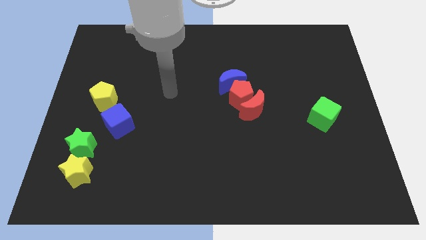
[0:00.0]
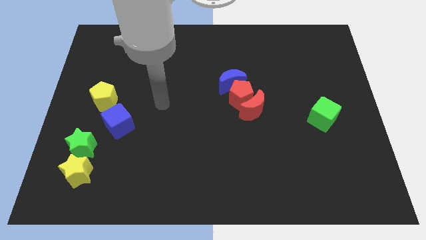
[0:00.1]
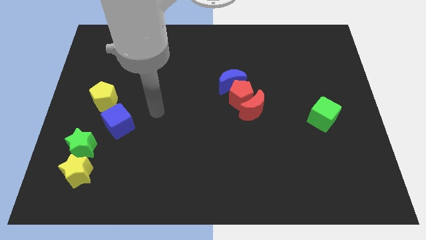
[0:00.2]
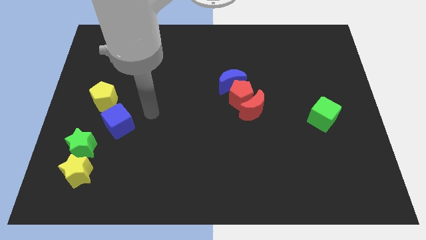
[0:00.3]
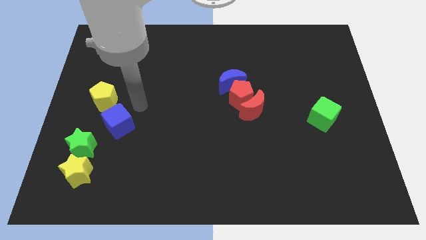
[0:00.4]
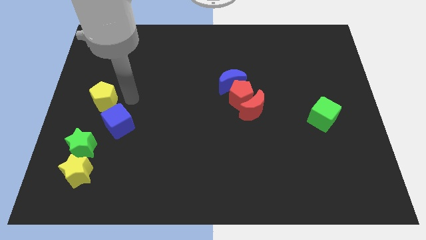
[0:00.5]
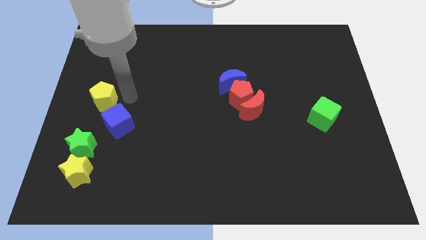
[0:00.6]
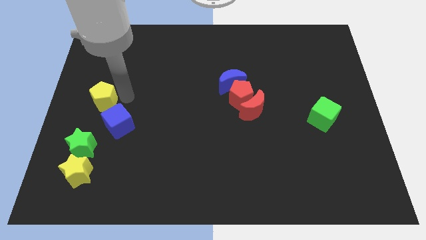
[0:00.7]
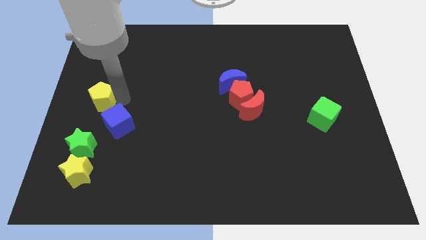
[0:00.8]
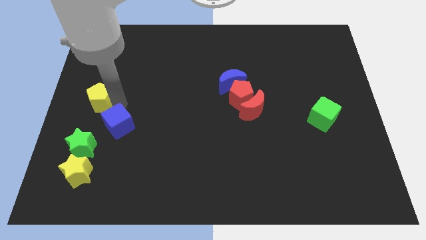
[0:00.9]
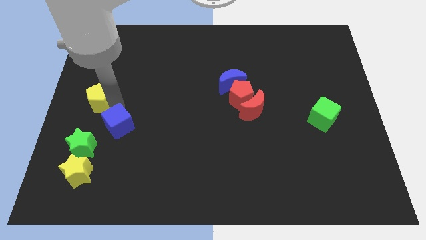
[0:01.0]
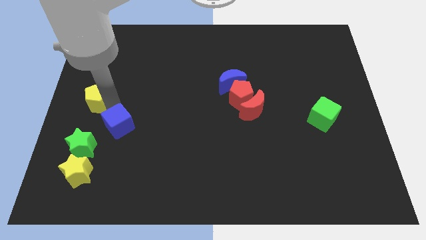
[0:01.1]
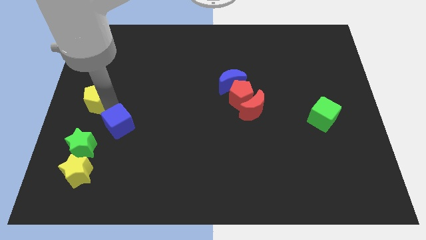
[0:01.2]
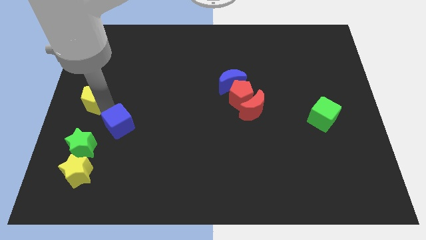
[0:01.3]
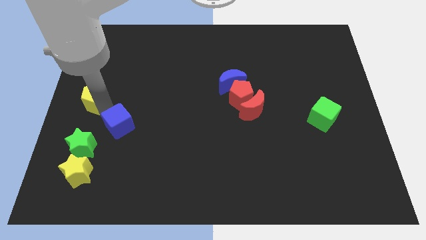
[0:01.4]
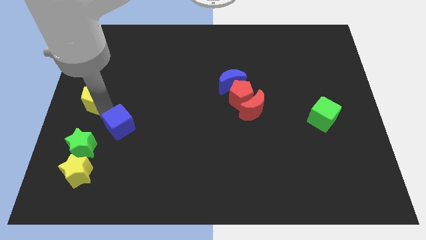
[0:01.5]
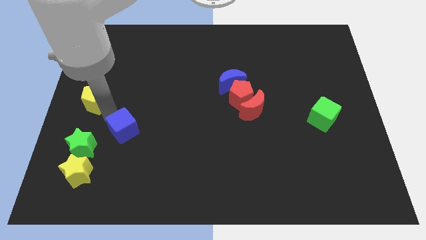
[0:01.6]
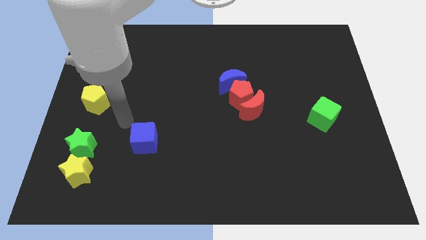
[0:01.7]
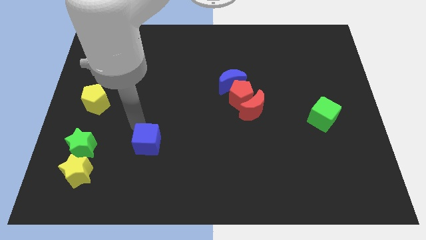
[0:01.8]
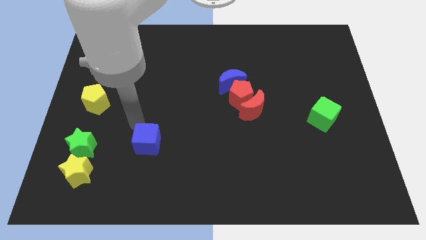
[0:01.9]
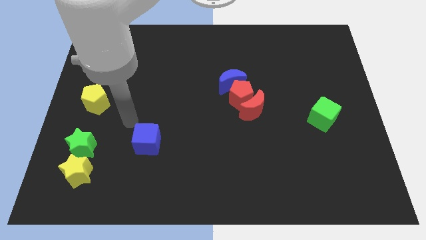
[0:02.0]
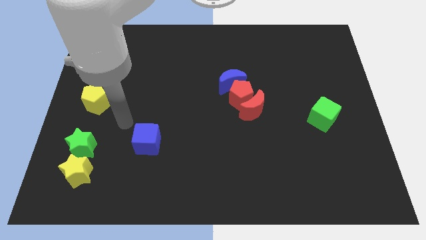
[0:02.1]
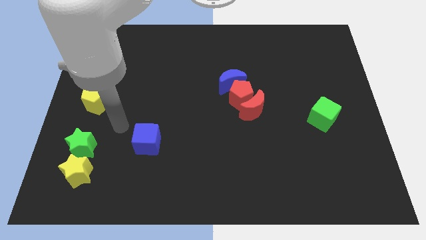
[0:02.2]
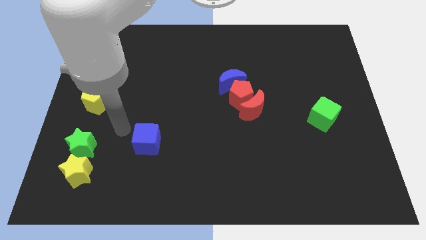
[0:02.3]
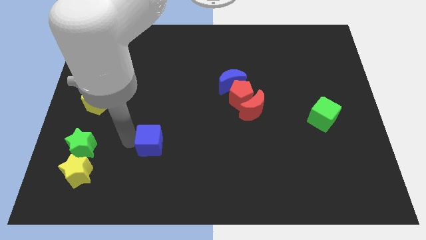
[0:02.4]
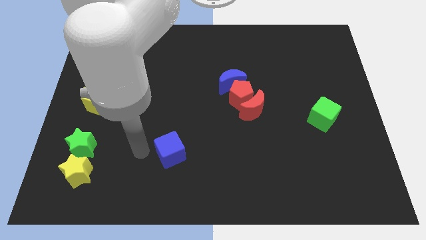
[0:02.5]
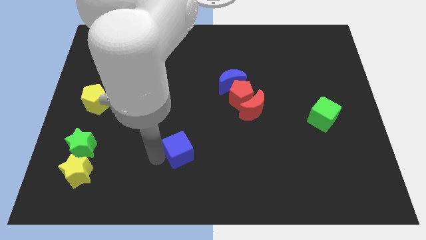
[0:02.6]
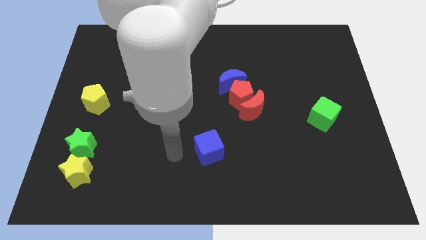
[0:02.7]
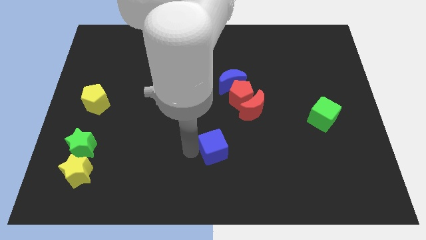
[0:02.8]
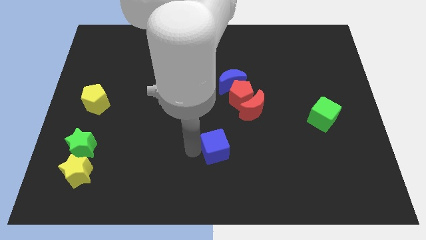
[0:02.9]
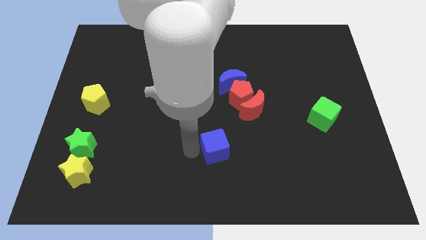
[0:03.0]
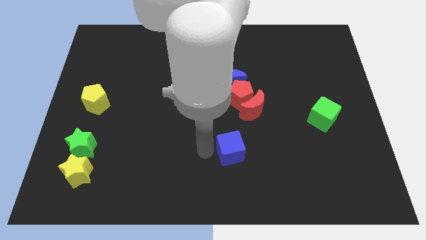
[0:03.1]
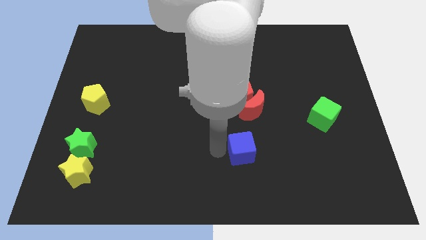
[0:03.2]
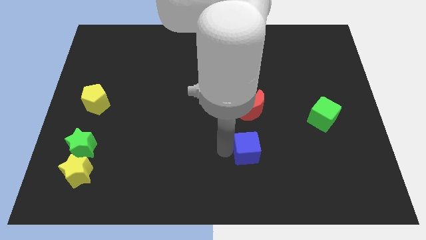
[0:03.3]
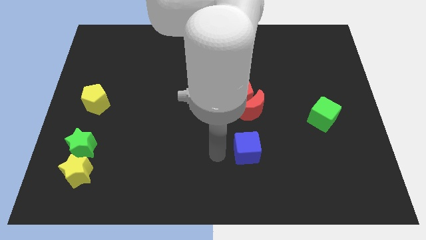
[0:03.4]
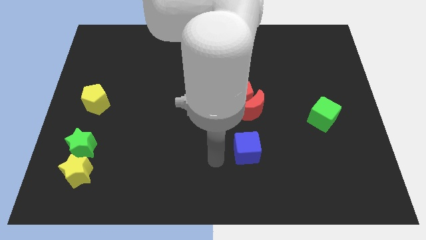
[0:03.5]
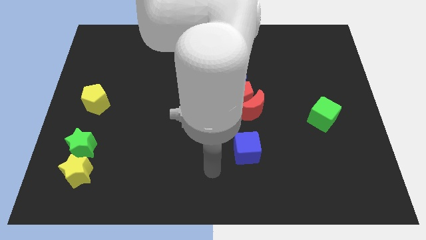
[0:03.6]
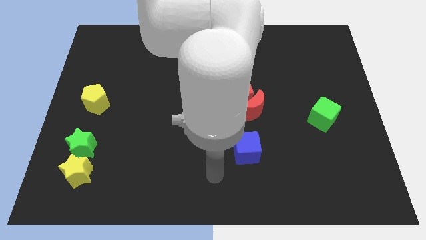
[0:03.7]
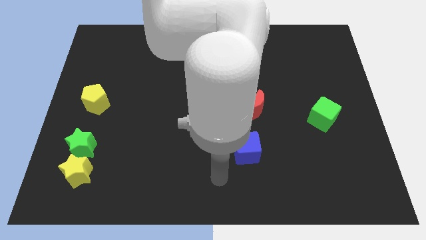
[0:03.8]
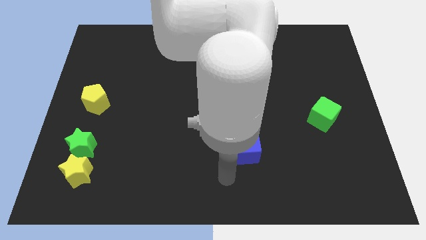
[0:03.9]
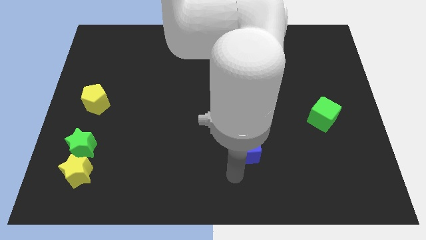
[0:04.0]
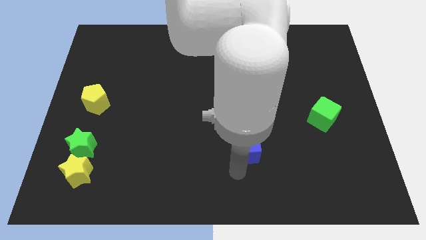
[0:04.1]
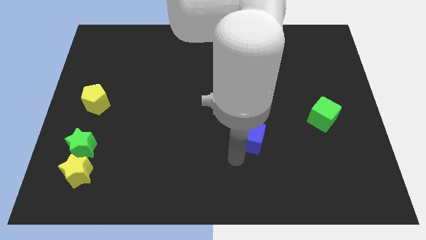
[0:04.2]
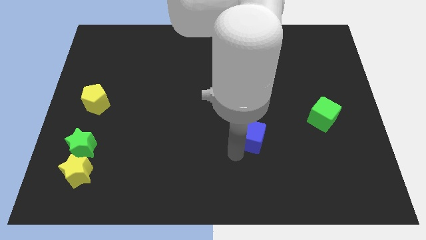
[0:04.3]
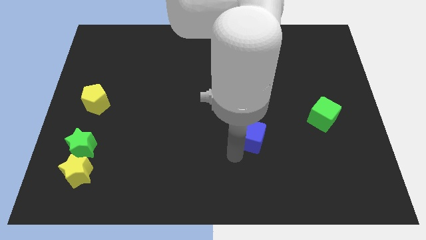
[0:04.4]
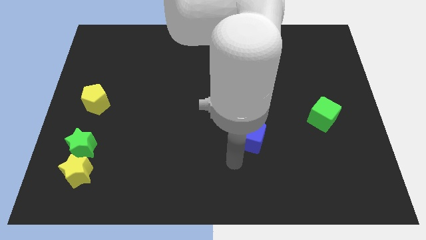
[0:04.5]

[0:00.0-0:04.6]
place the blue cube below the red crescent

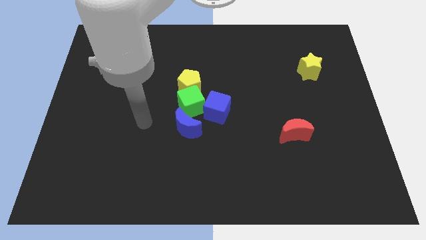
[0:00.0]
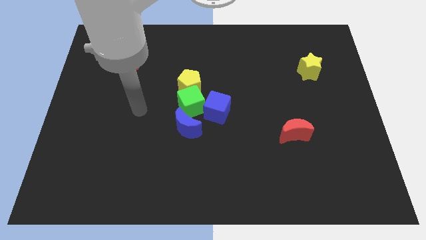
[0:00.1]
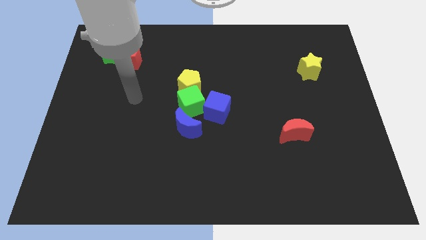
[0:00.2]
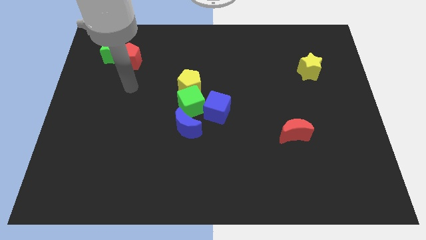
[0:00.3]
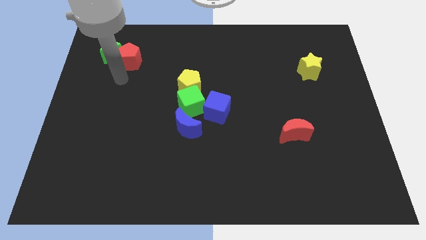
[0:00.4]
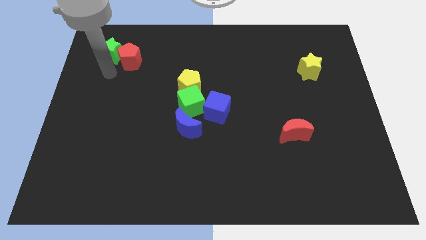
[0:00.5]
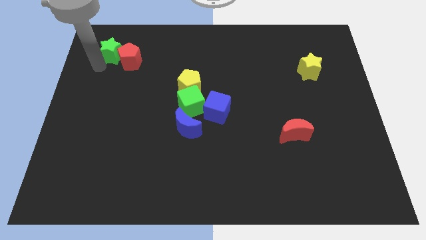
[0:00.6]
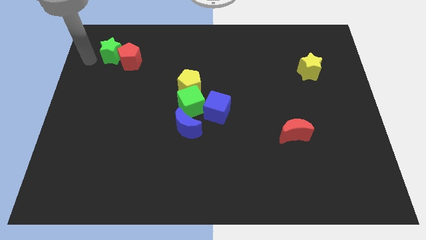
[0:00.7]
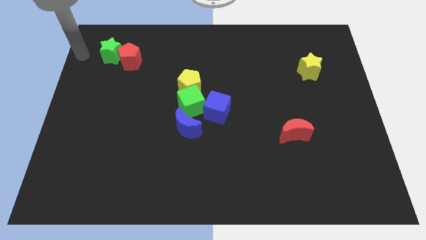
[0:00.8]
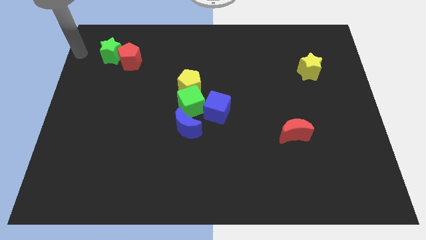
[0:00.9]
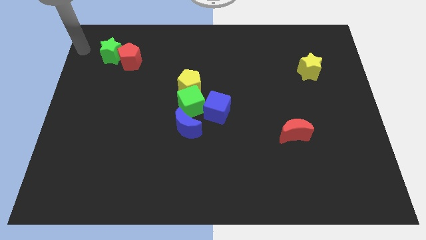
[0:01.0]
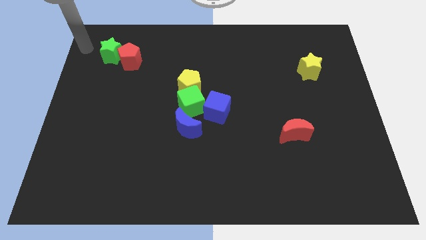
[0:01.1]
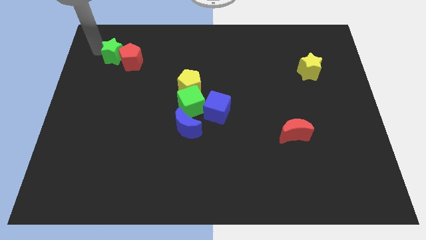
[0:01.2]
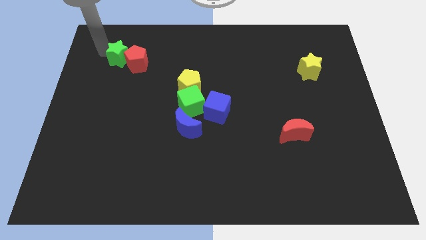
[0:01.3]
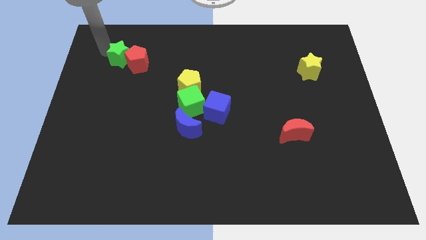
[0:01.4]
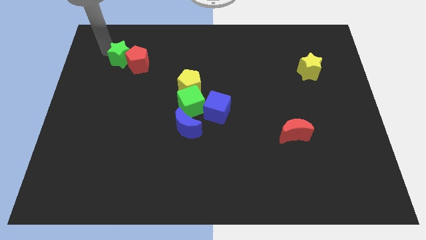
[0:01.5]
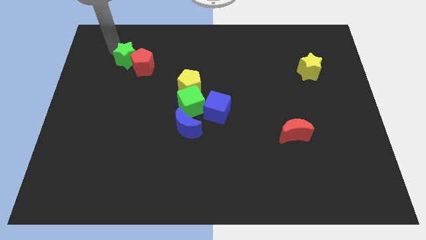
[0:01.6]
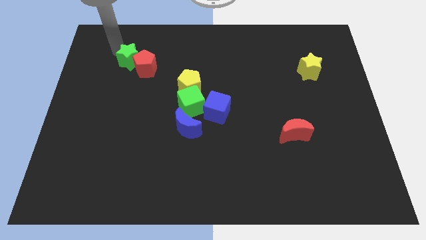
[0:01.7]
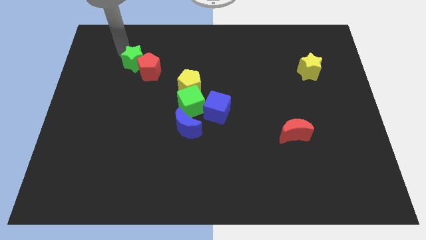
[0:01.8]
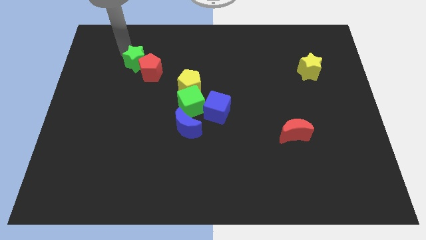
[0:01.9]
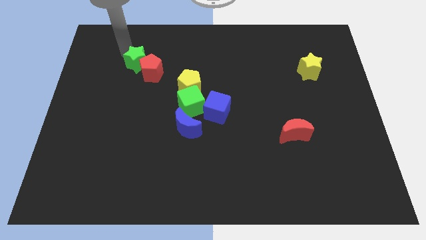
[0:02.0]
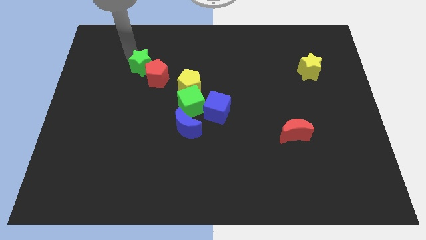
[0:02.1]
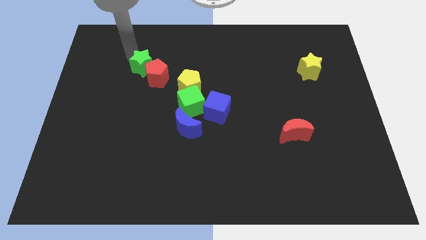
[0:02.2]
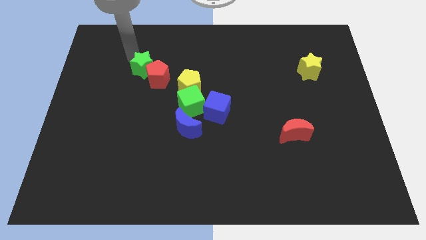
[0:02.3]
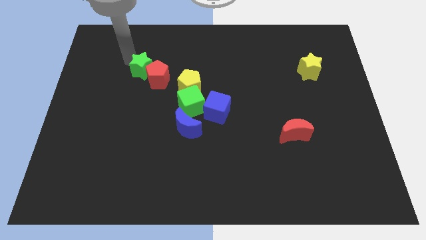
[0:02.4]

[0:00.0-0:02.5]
slide the green star and the red pentagon towards the center of the board

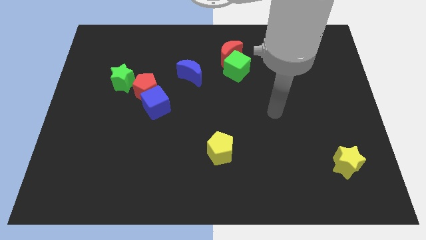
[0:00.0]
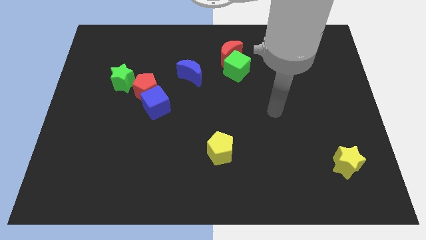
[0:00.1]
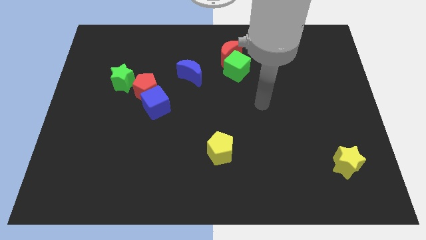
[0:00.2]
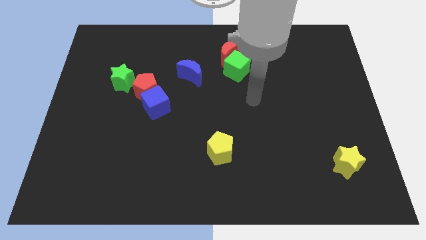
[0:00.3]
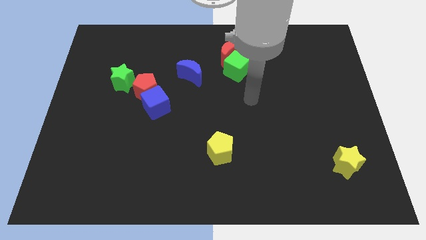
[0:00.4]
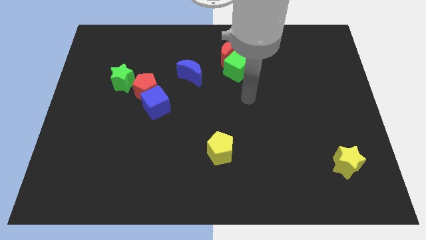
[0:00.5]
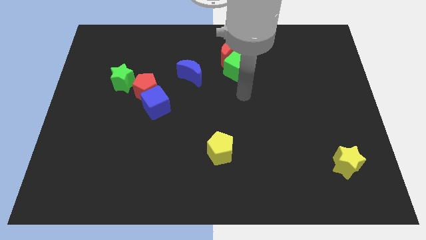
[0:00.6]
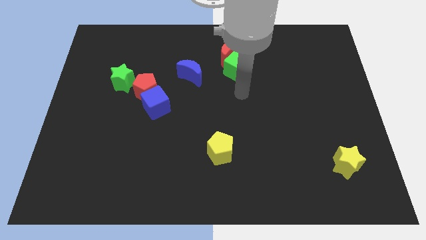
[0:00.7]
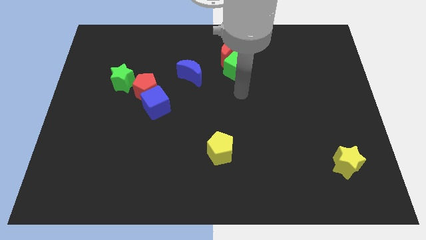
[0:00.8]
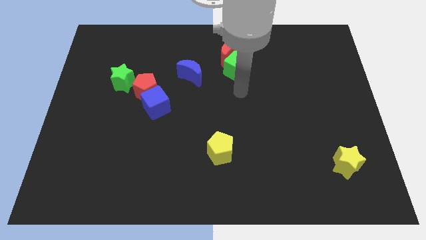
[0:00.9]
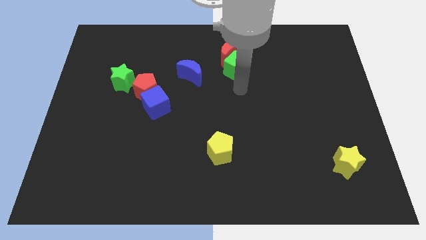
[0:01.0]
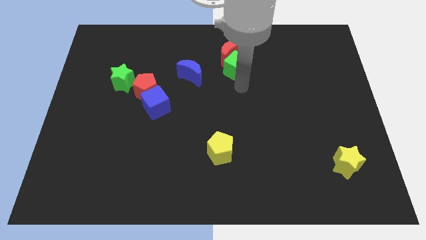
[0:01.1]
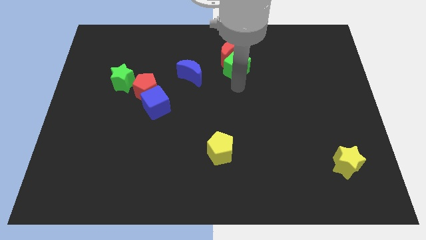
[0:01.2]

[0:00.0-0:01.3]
move your arm towards the bottom of green cube

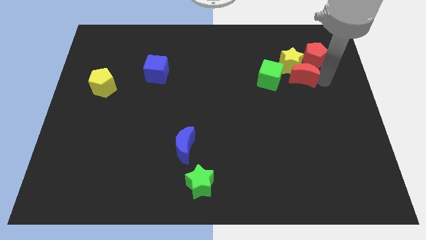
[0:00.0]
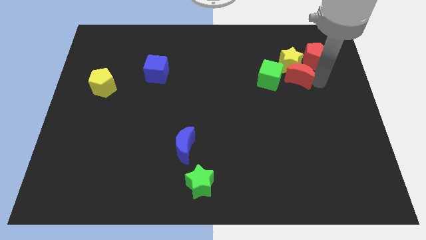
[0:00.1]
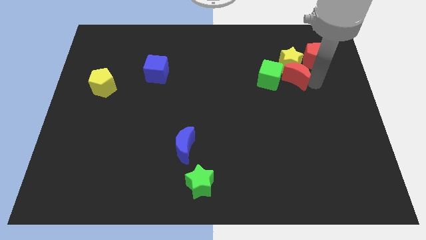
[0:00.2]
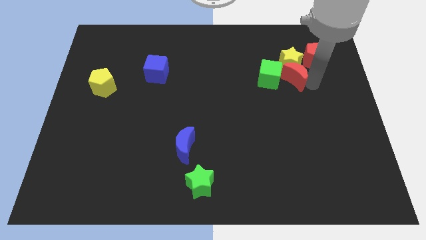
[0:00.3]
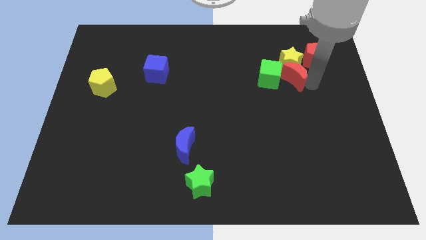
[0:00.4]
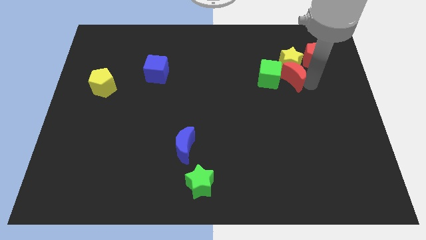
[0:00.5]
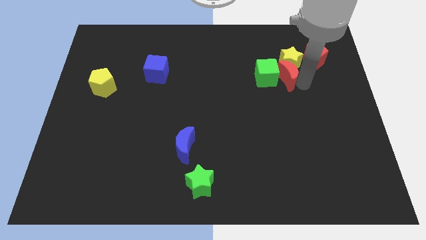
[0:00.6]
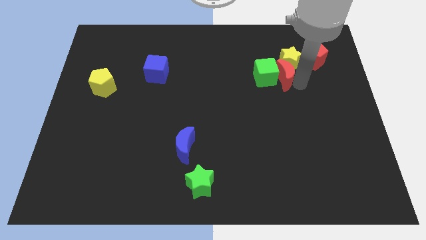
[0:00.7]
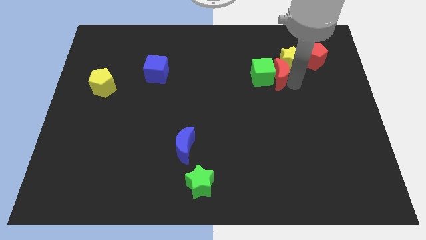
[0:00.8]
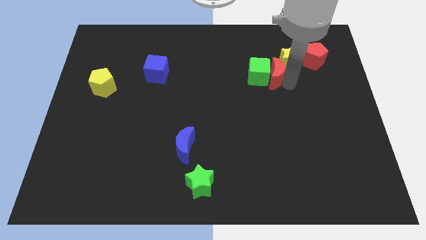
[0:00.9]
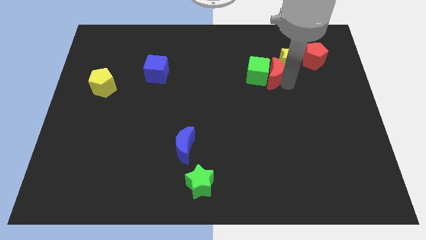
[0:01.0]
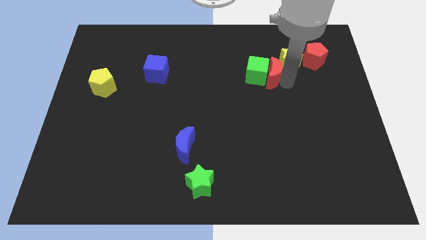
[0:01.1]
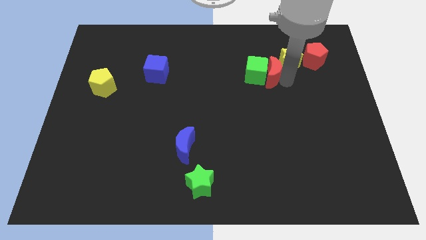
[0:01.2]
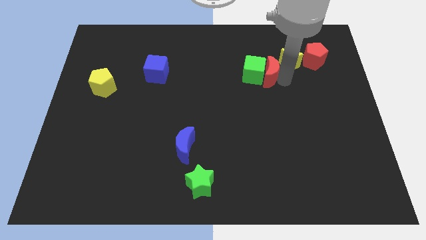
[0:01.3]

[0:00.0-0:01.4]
slide the red crescent into the green cube
